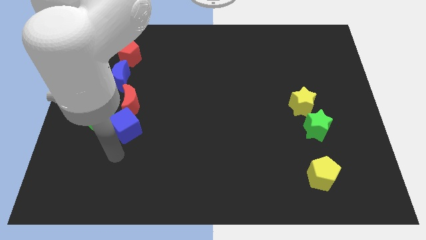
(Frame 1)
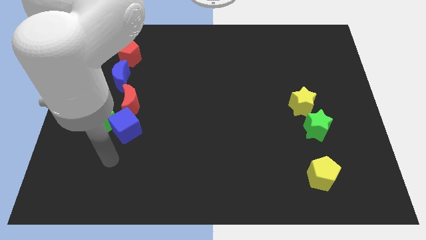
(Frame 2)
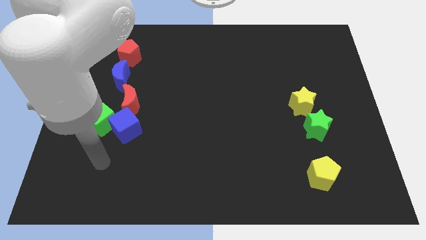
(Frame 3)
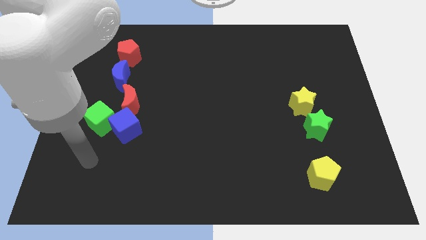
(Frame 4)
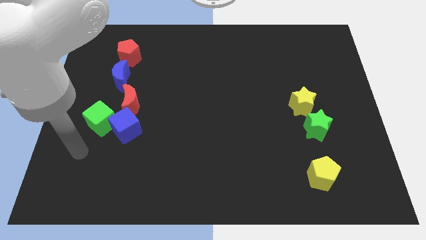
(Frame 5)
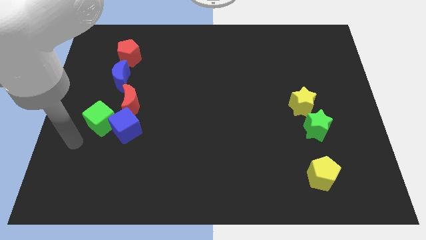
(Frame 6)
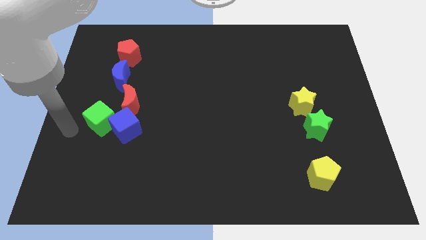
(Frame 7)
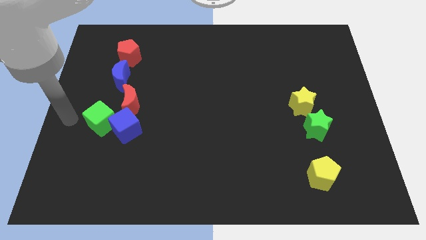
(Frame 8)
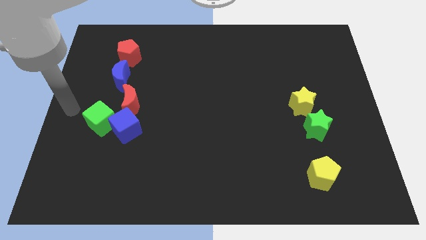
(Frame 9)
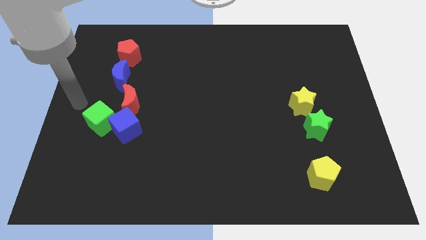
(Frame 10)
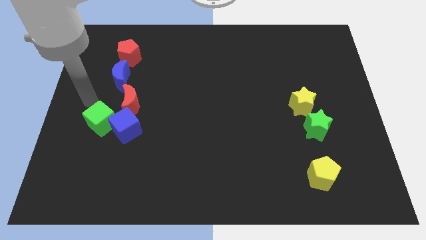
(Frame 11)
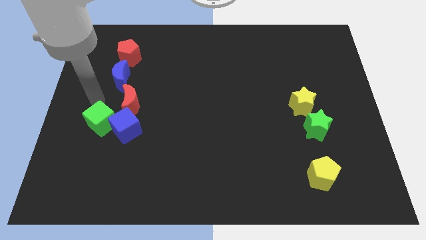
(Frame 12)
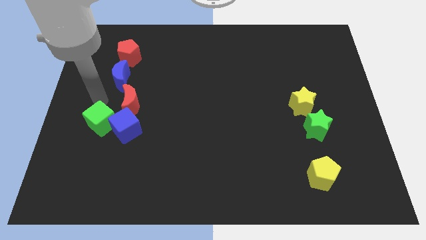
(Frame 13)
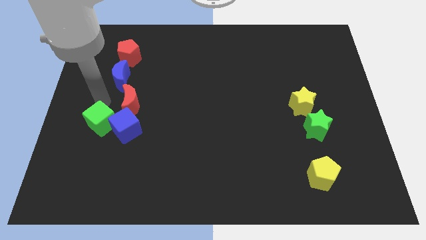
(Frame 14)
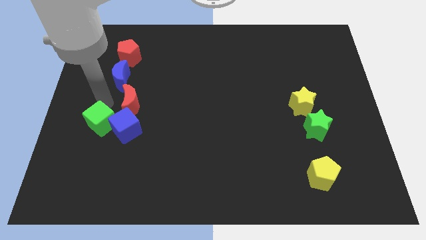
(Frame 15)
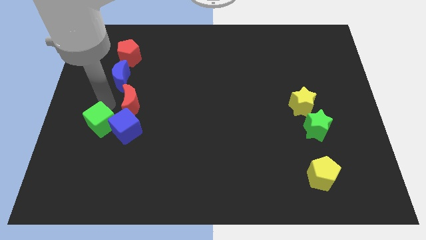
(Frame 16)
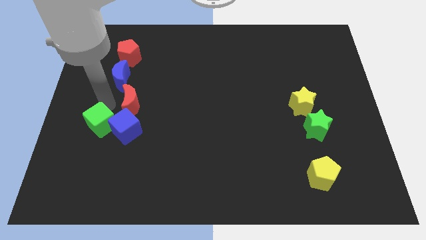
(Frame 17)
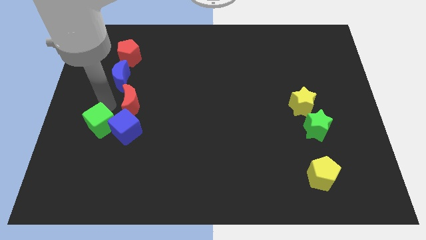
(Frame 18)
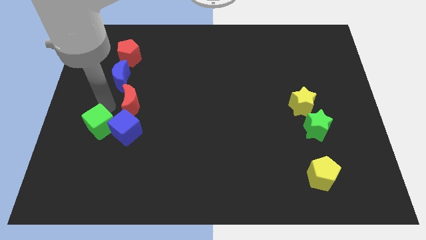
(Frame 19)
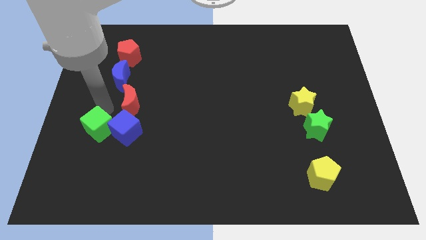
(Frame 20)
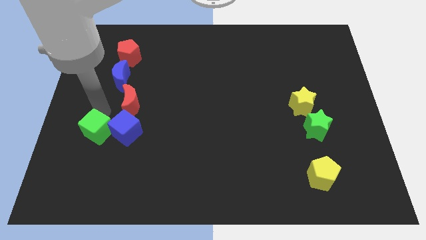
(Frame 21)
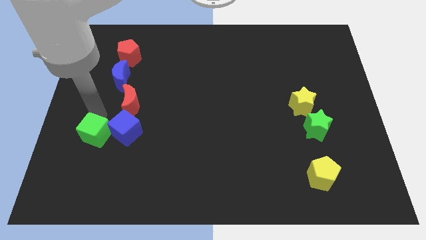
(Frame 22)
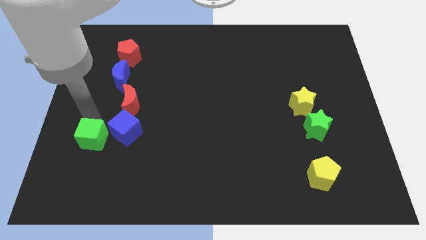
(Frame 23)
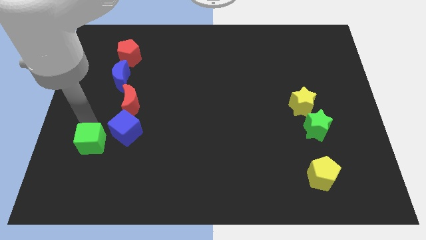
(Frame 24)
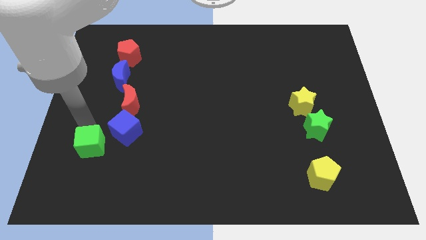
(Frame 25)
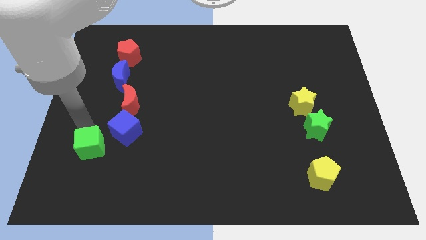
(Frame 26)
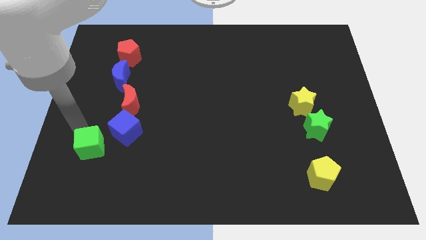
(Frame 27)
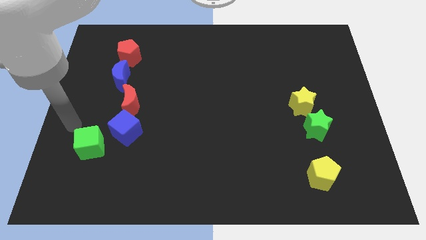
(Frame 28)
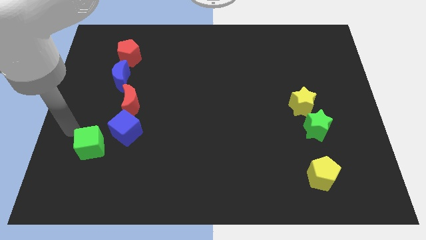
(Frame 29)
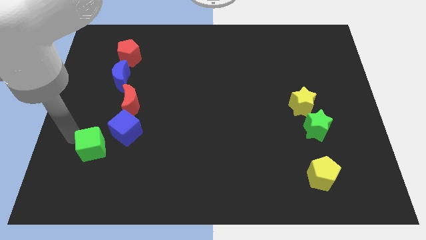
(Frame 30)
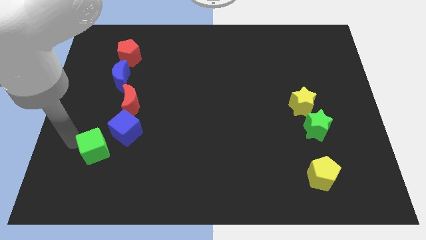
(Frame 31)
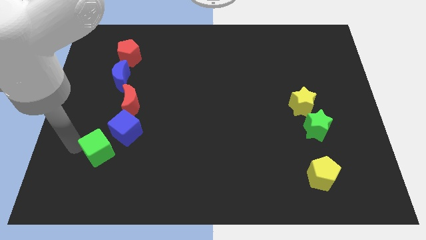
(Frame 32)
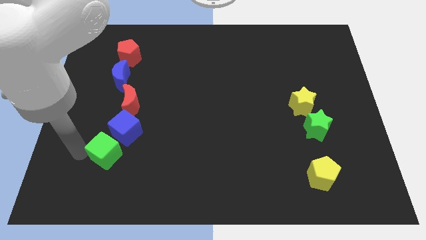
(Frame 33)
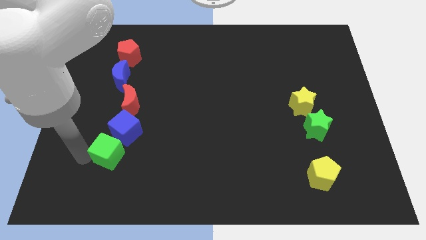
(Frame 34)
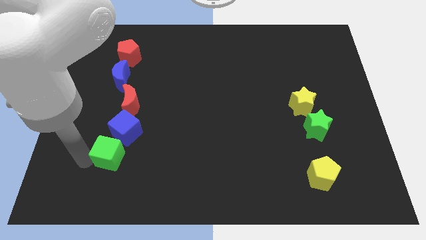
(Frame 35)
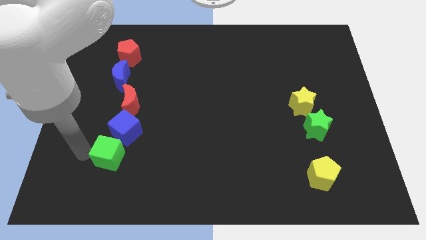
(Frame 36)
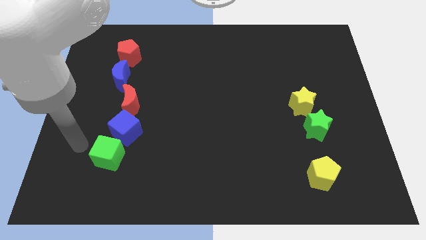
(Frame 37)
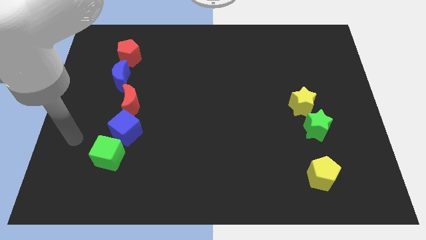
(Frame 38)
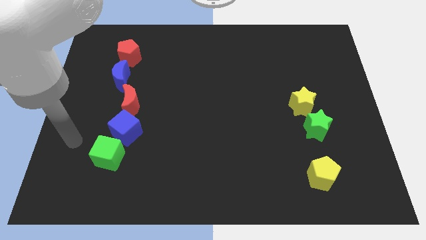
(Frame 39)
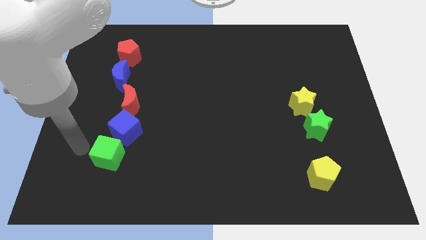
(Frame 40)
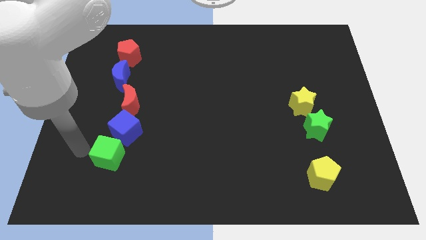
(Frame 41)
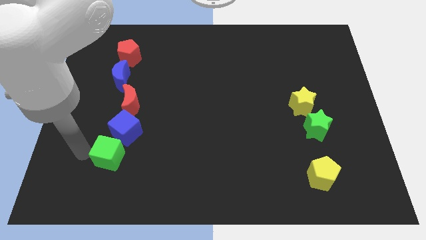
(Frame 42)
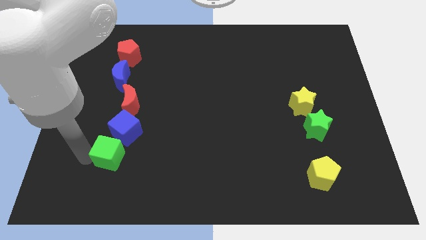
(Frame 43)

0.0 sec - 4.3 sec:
separate the green cube from the blue cube

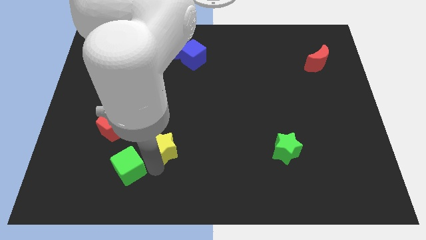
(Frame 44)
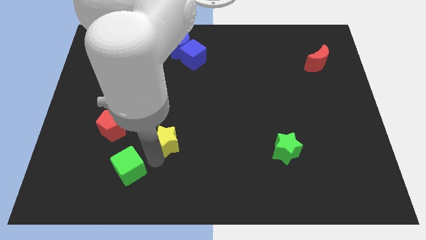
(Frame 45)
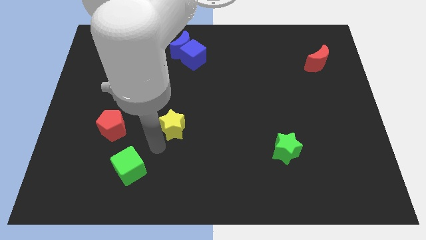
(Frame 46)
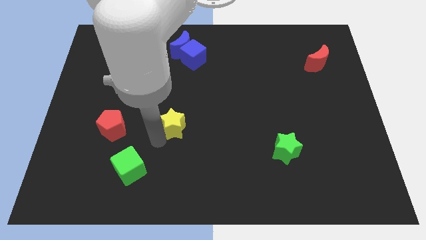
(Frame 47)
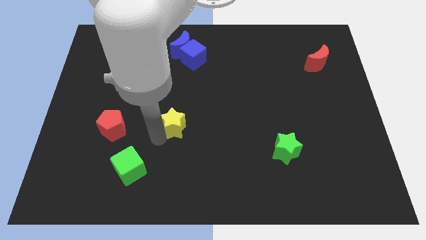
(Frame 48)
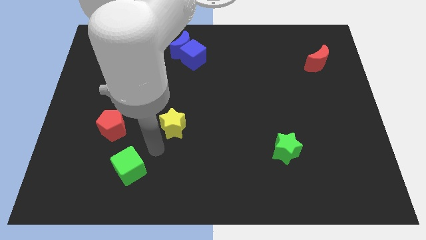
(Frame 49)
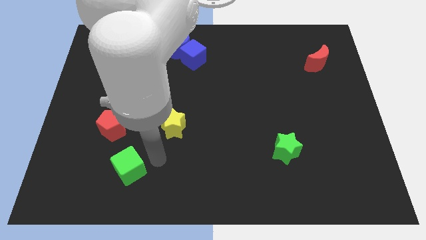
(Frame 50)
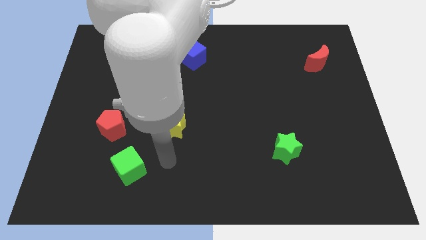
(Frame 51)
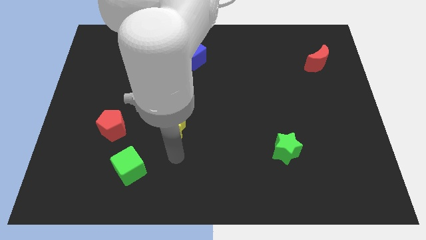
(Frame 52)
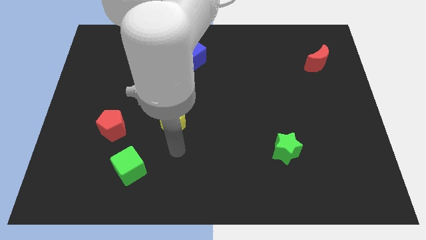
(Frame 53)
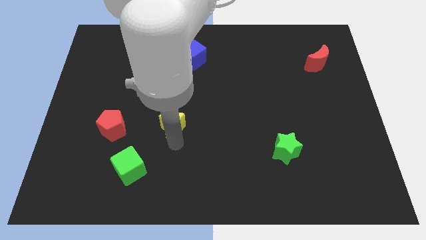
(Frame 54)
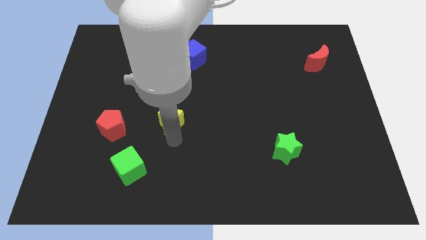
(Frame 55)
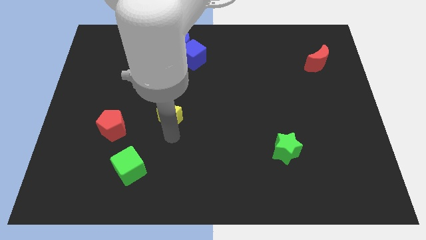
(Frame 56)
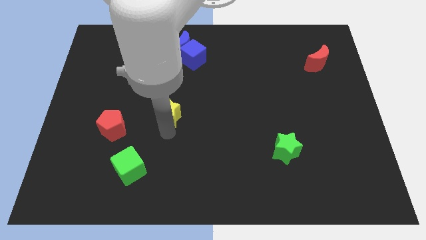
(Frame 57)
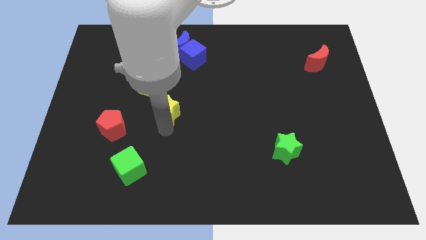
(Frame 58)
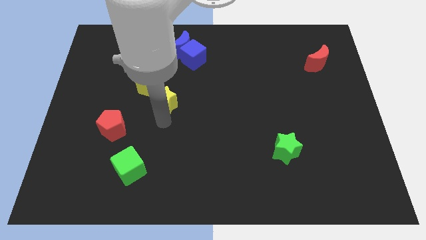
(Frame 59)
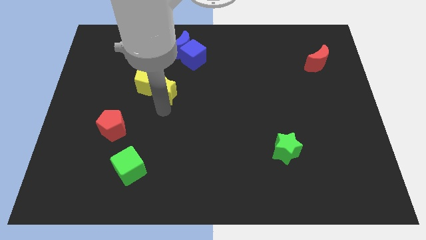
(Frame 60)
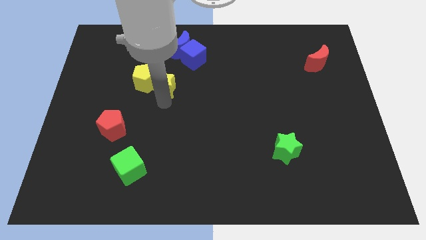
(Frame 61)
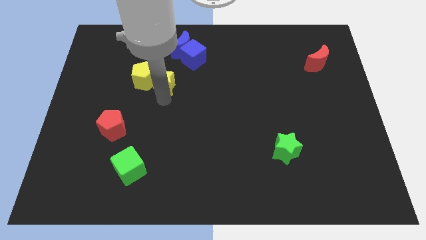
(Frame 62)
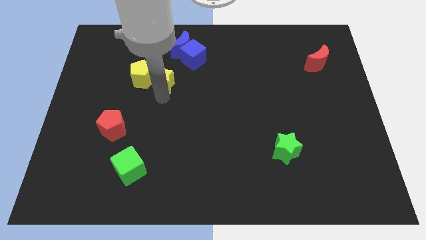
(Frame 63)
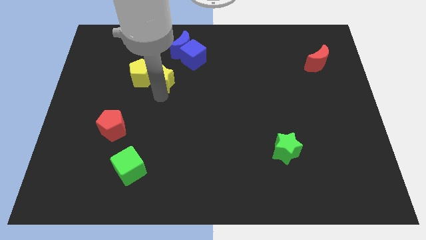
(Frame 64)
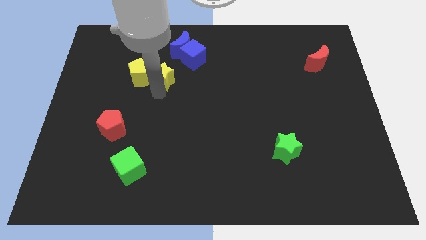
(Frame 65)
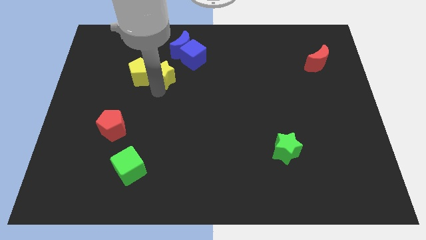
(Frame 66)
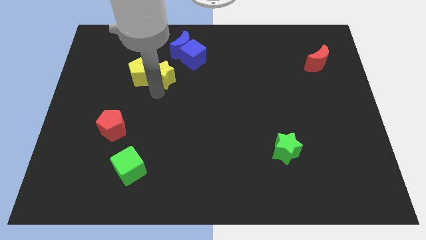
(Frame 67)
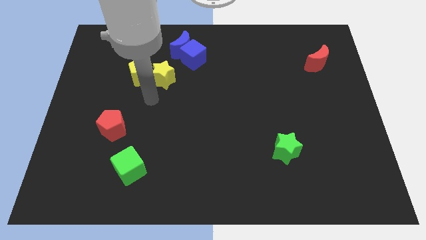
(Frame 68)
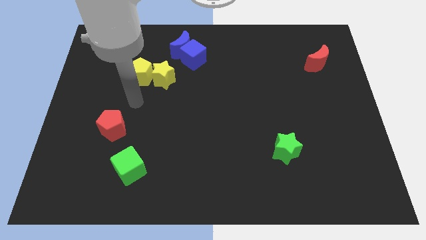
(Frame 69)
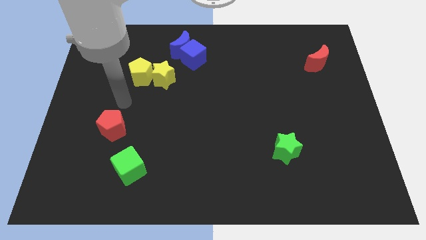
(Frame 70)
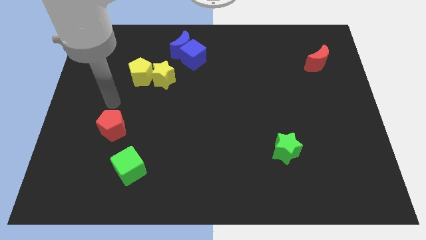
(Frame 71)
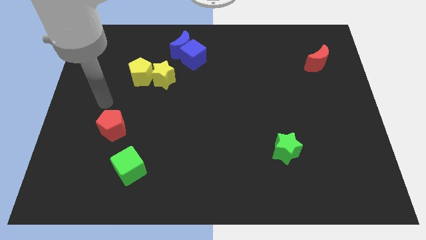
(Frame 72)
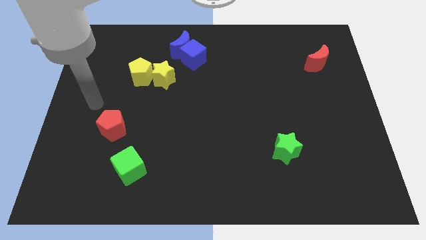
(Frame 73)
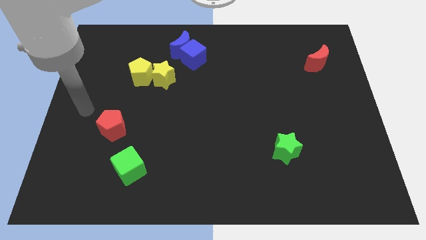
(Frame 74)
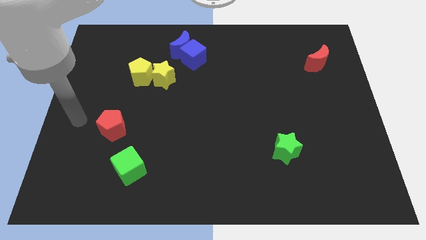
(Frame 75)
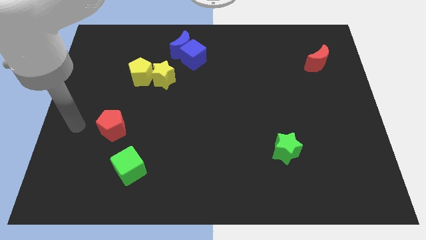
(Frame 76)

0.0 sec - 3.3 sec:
move the yellow star into the yellow pentagon

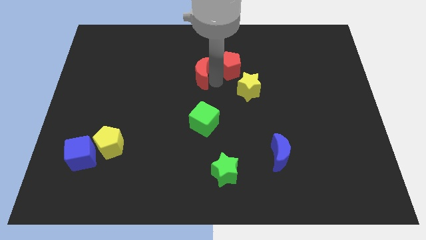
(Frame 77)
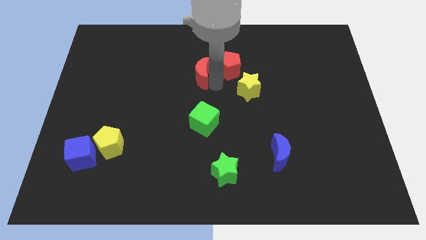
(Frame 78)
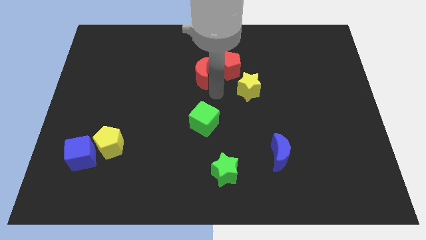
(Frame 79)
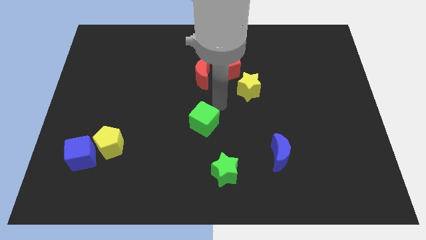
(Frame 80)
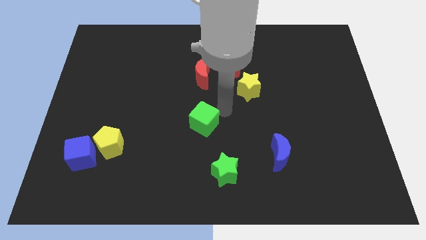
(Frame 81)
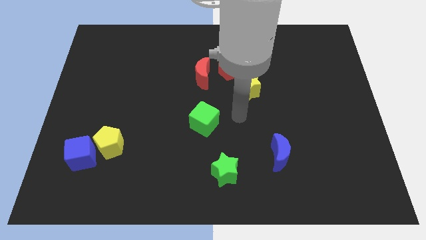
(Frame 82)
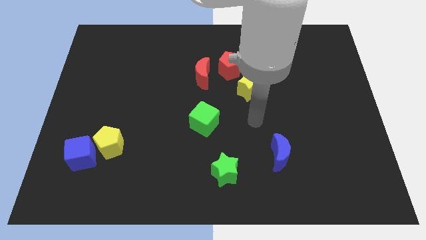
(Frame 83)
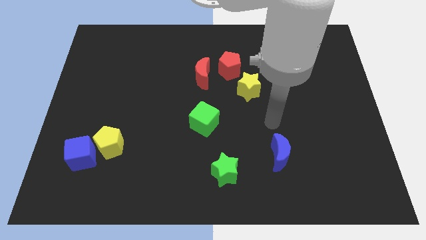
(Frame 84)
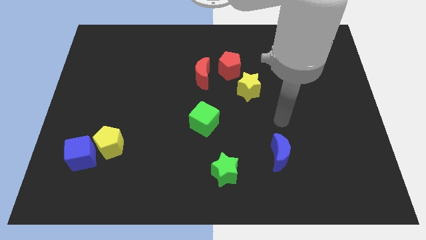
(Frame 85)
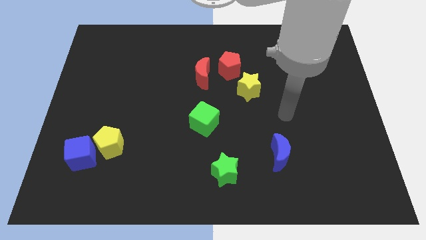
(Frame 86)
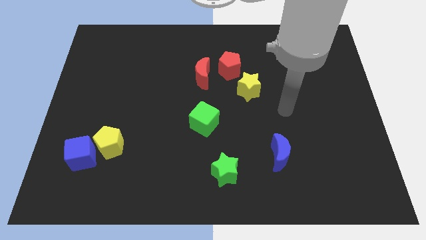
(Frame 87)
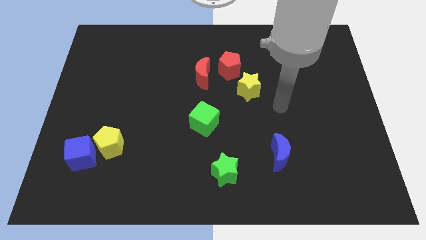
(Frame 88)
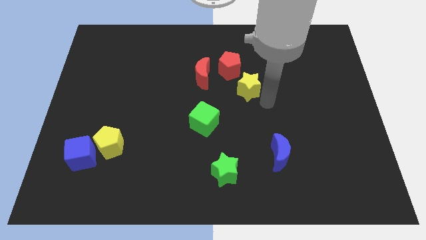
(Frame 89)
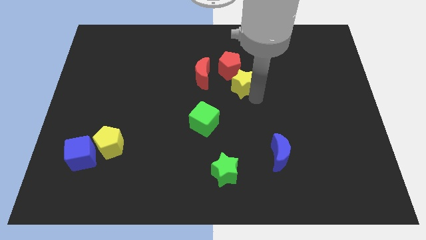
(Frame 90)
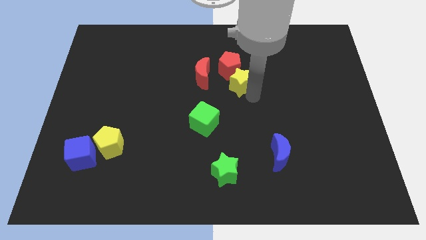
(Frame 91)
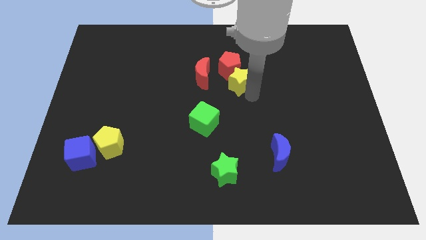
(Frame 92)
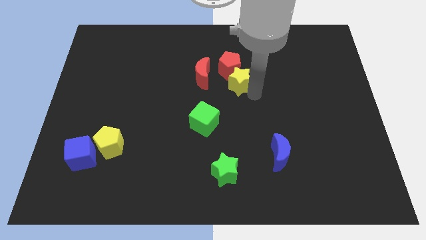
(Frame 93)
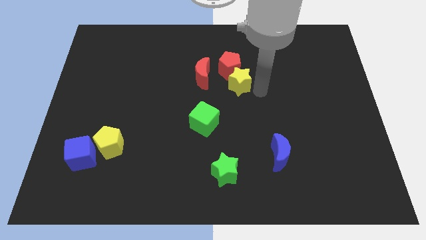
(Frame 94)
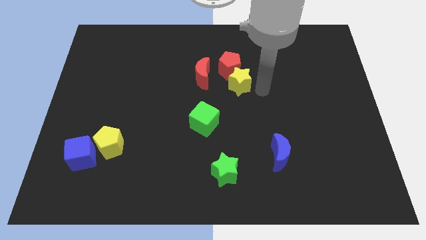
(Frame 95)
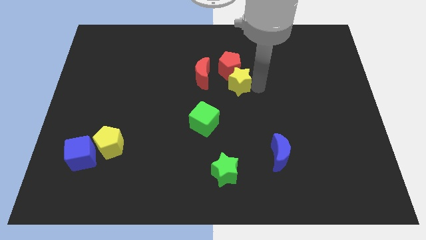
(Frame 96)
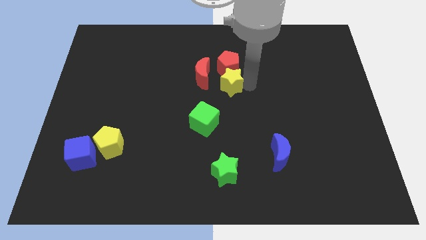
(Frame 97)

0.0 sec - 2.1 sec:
push yellow star below the red pentagon
